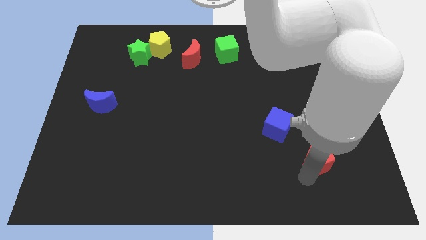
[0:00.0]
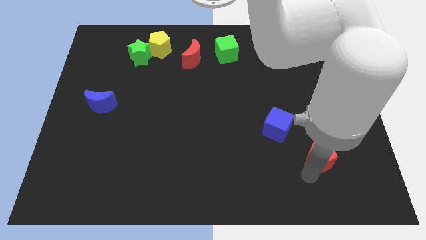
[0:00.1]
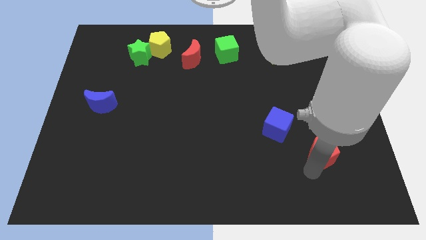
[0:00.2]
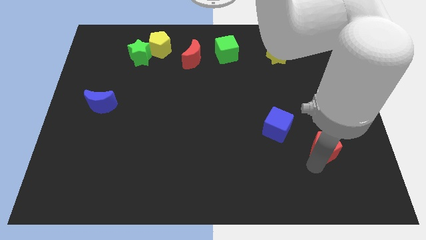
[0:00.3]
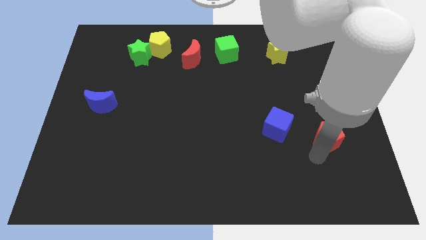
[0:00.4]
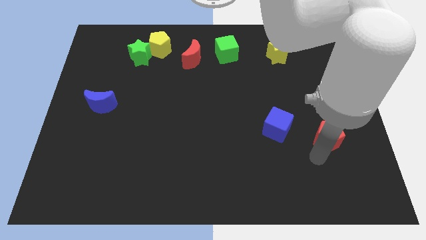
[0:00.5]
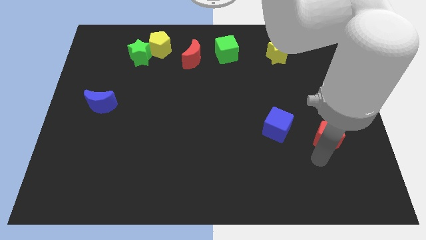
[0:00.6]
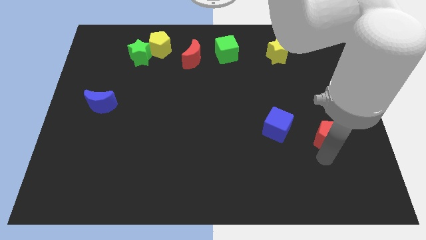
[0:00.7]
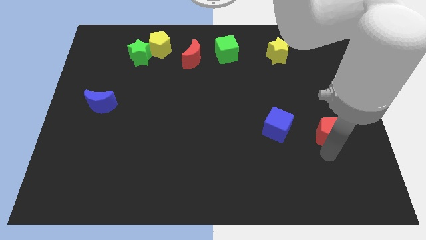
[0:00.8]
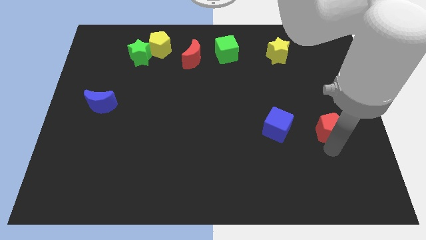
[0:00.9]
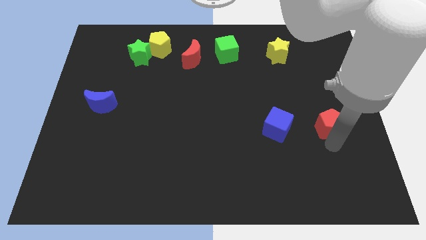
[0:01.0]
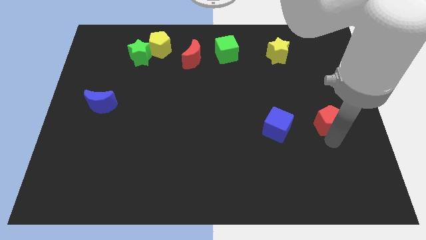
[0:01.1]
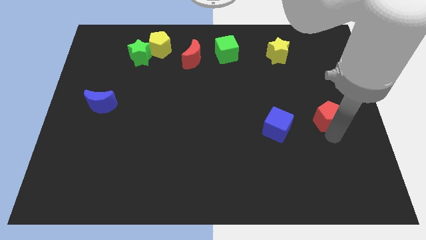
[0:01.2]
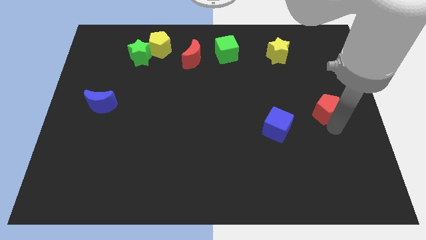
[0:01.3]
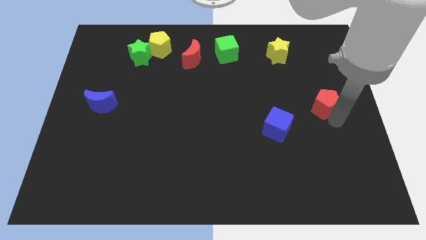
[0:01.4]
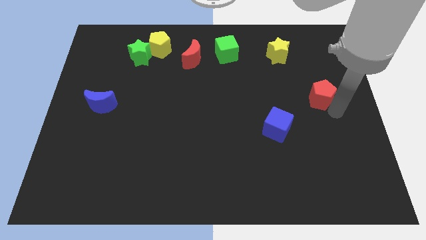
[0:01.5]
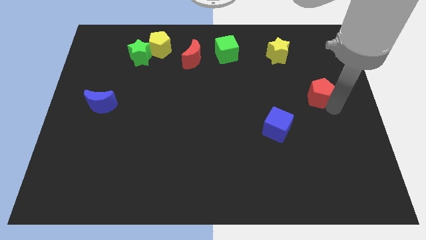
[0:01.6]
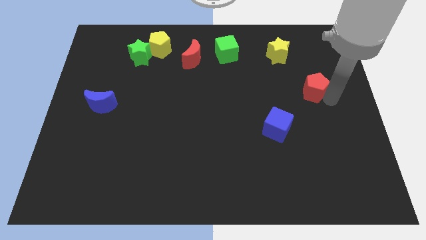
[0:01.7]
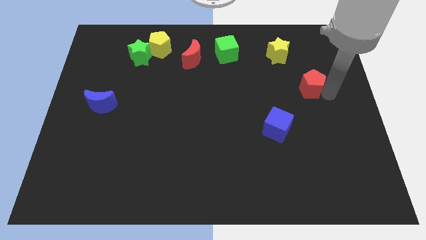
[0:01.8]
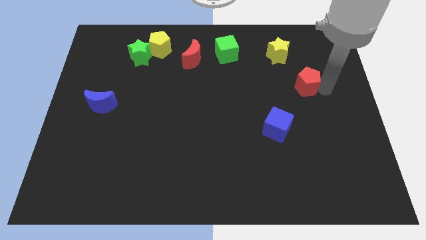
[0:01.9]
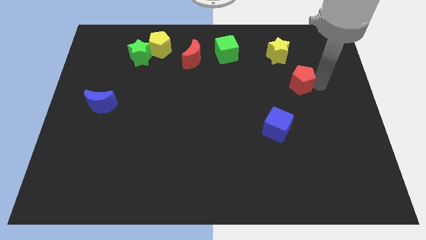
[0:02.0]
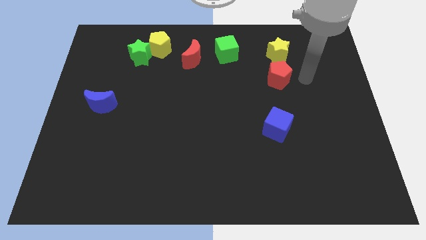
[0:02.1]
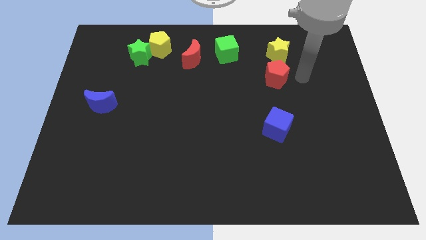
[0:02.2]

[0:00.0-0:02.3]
drag the red moon below the yellow star

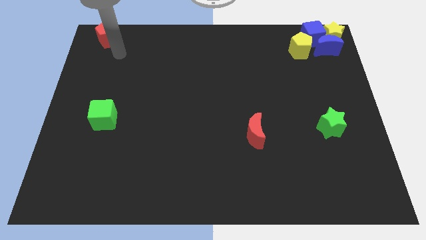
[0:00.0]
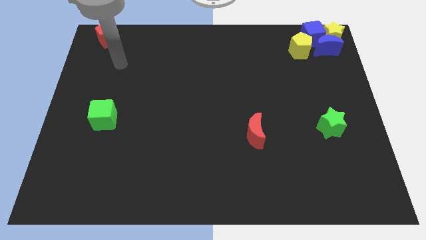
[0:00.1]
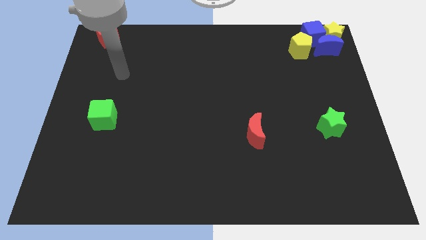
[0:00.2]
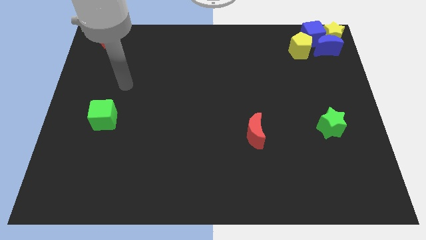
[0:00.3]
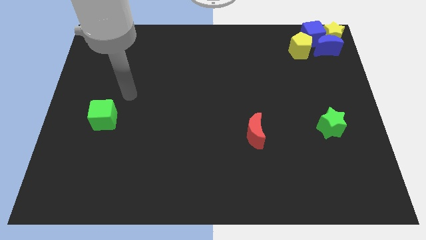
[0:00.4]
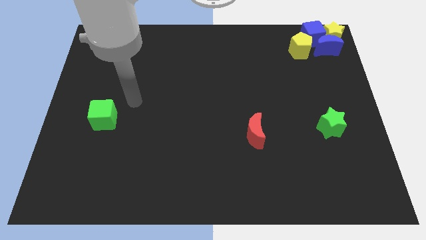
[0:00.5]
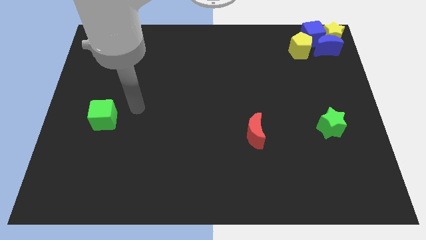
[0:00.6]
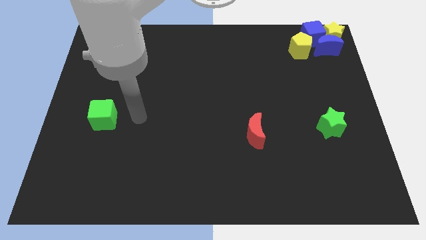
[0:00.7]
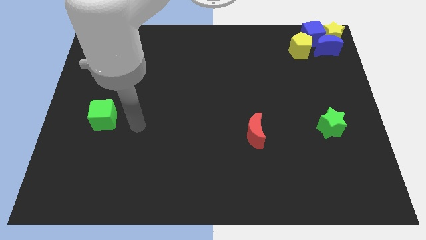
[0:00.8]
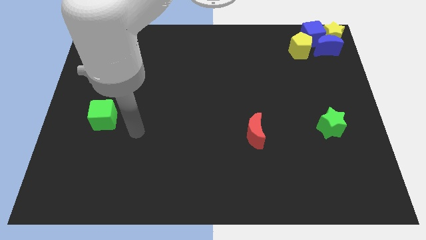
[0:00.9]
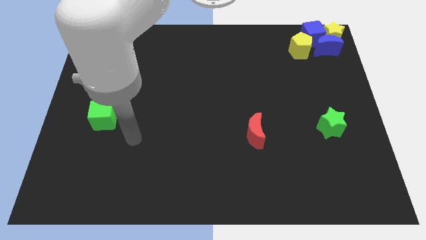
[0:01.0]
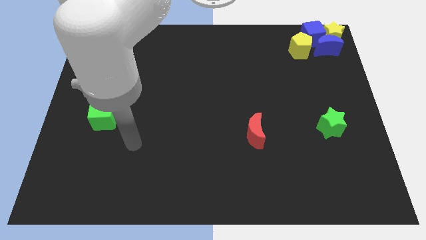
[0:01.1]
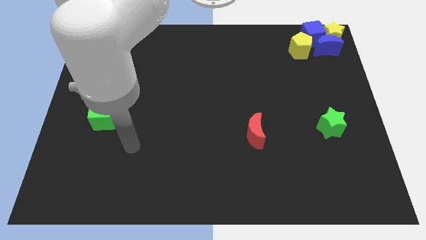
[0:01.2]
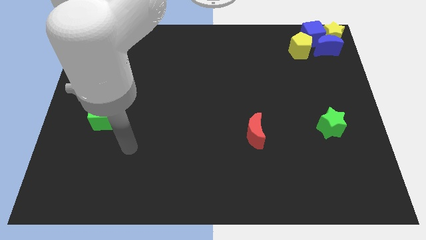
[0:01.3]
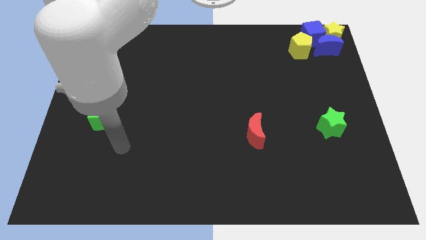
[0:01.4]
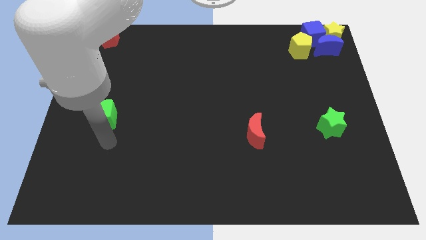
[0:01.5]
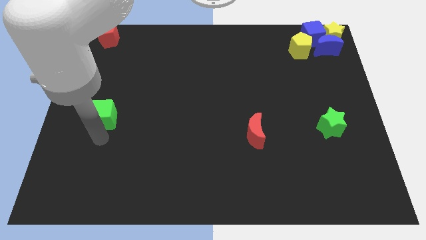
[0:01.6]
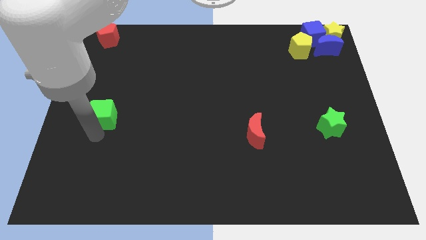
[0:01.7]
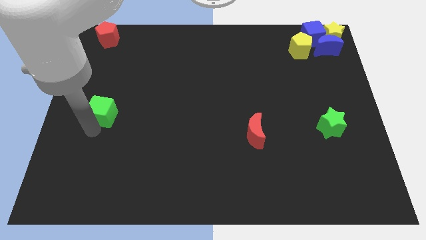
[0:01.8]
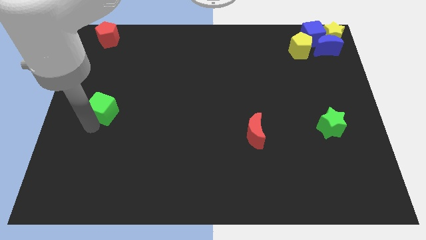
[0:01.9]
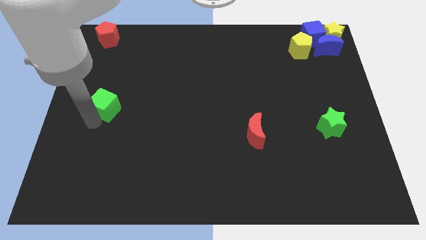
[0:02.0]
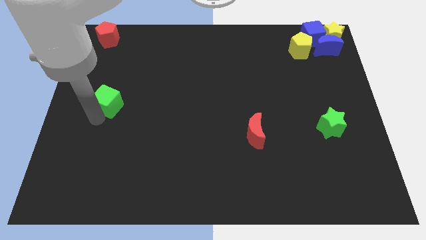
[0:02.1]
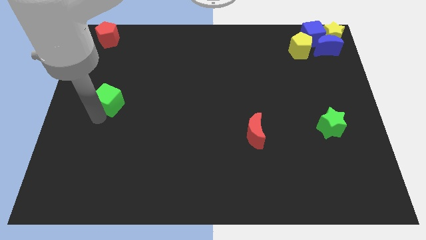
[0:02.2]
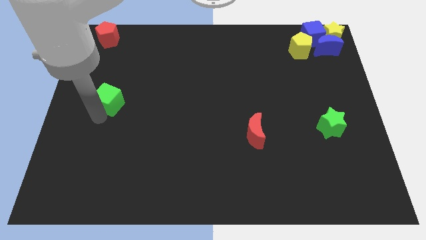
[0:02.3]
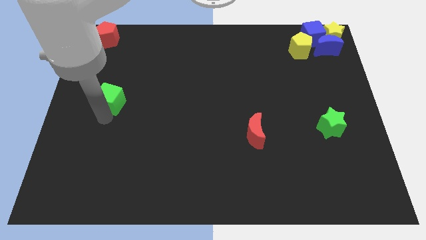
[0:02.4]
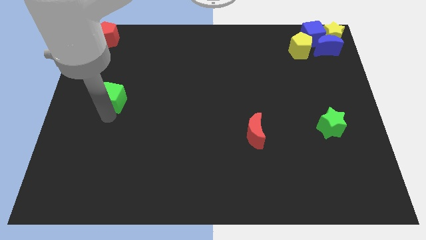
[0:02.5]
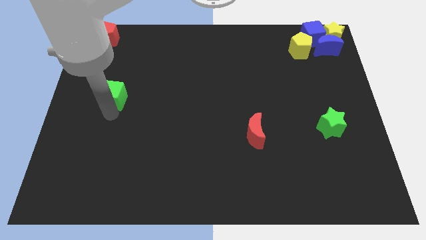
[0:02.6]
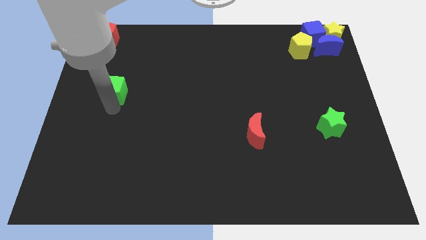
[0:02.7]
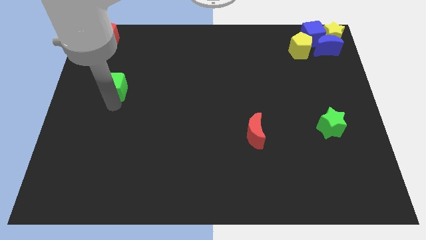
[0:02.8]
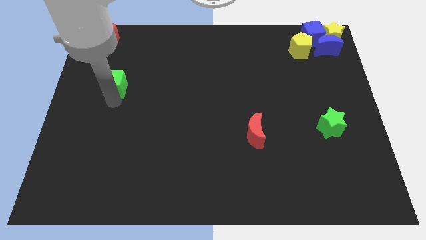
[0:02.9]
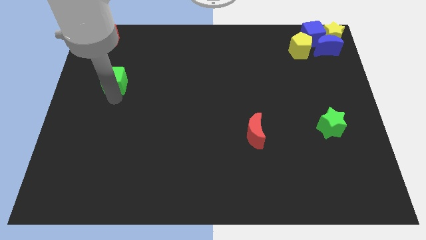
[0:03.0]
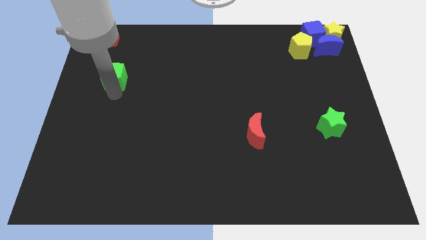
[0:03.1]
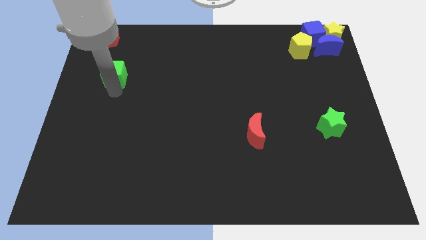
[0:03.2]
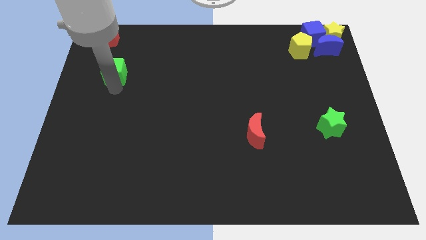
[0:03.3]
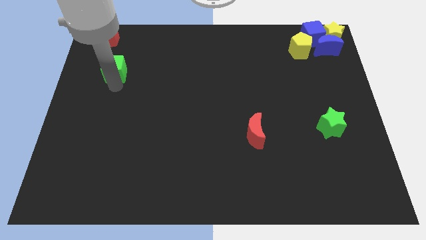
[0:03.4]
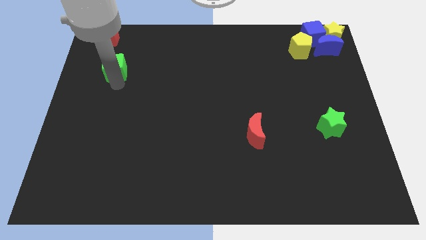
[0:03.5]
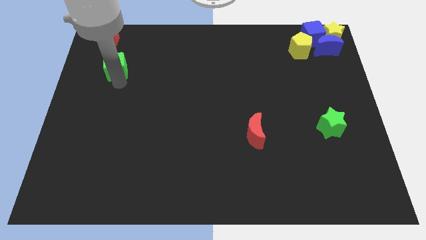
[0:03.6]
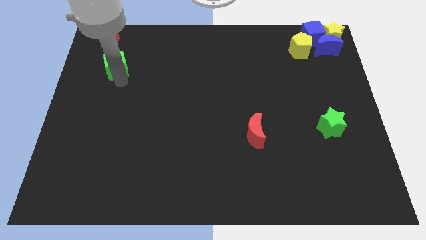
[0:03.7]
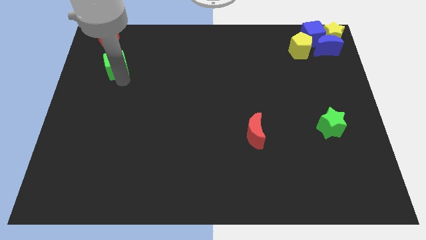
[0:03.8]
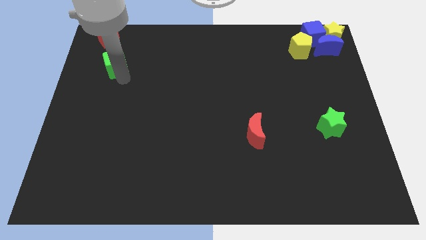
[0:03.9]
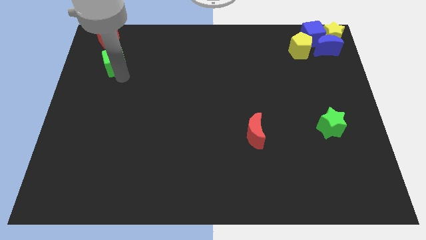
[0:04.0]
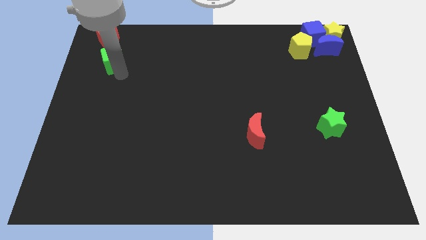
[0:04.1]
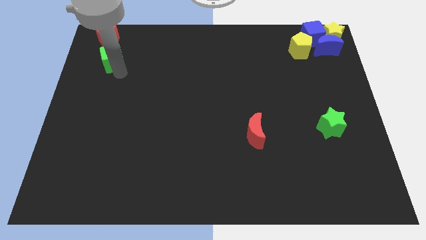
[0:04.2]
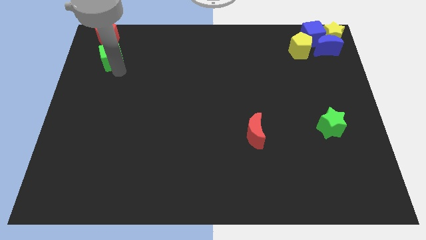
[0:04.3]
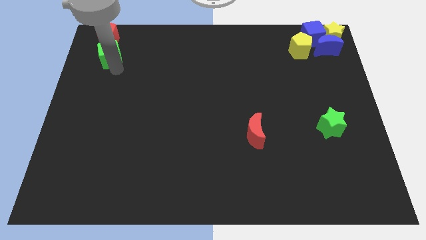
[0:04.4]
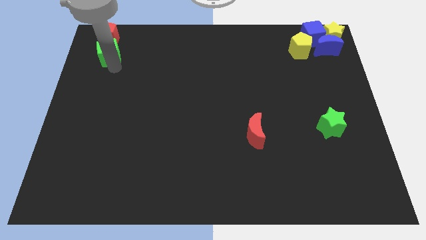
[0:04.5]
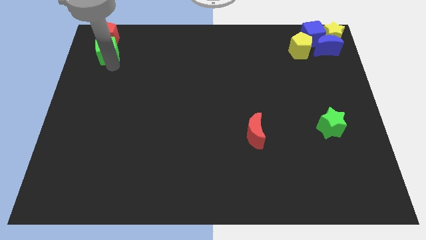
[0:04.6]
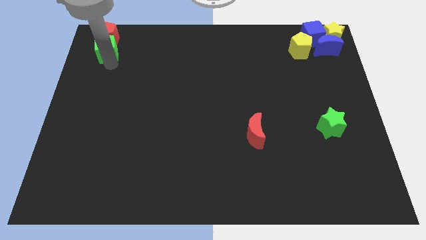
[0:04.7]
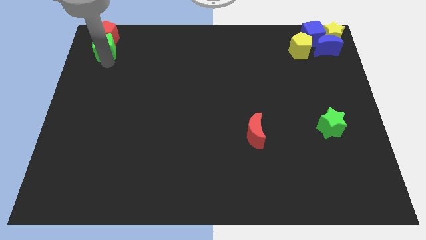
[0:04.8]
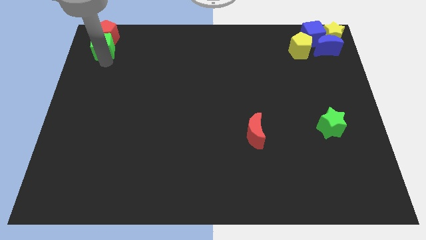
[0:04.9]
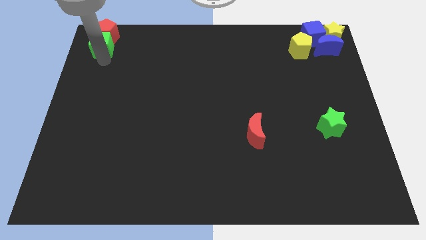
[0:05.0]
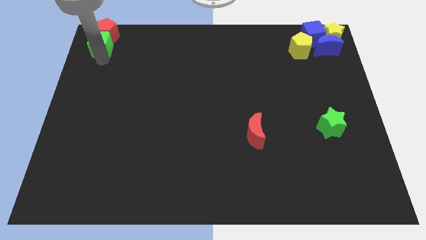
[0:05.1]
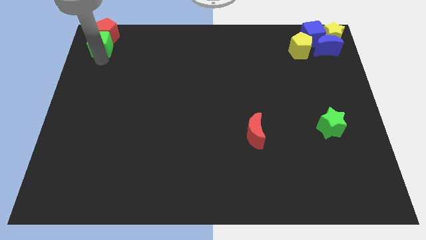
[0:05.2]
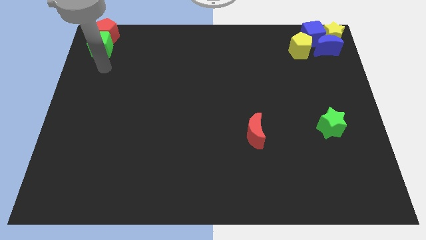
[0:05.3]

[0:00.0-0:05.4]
move the green cube near to the red pentagon

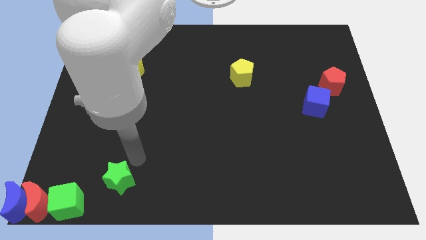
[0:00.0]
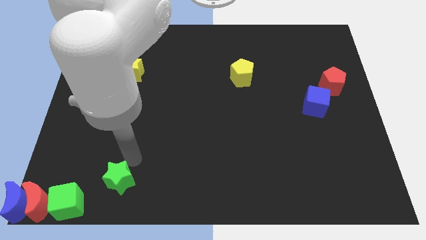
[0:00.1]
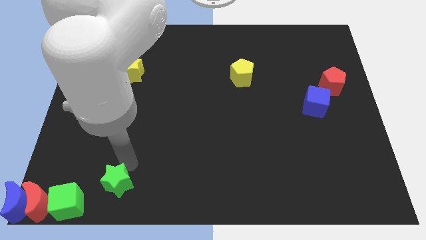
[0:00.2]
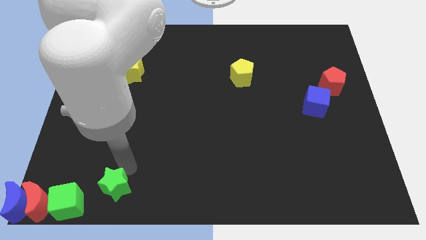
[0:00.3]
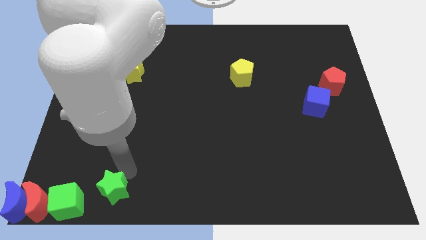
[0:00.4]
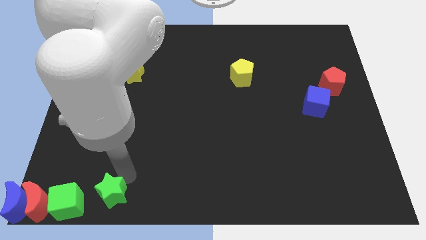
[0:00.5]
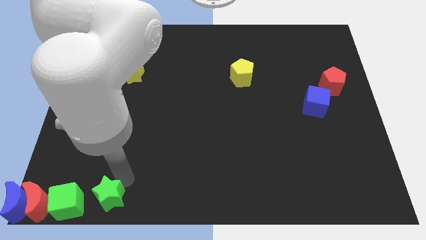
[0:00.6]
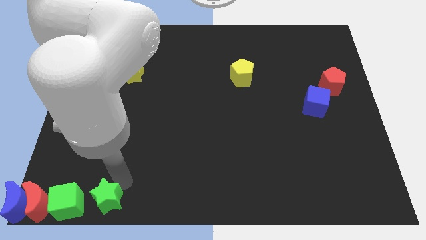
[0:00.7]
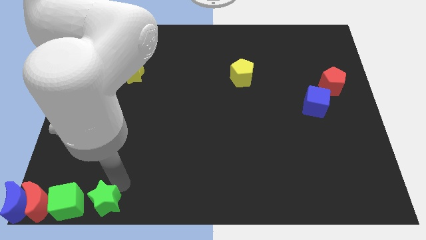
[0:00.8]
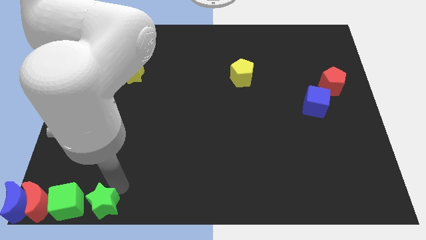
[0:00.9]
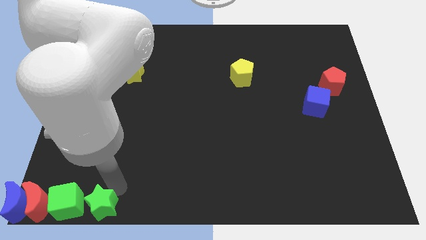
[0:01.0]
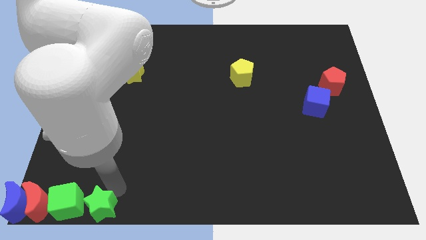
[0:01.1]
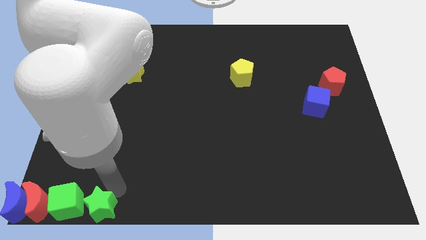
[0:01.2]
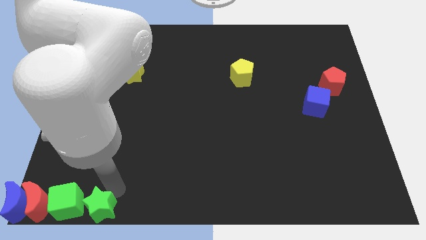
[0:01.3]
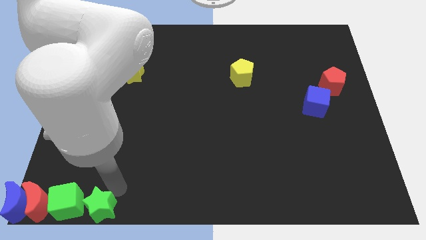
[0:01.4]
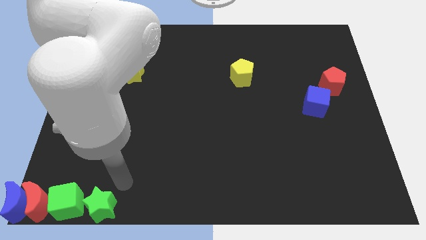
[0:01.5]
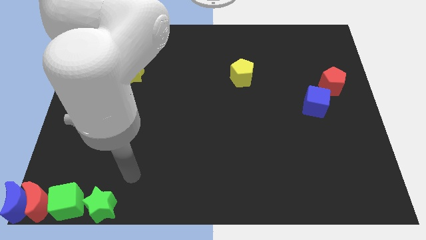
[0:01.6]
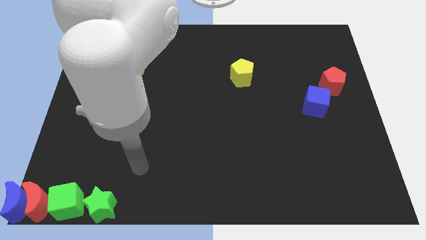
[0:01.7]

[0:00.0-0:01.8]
move the green star to the right side of the green cube
